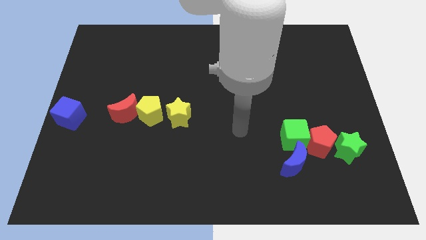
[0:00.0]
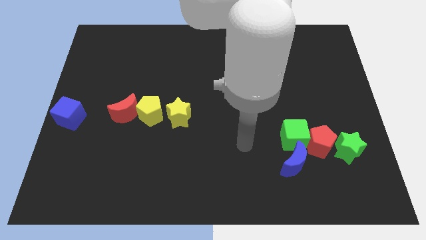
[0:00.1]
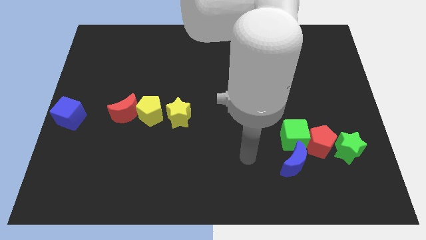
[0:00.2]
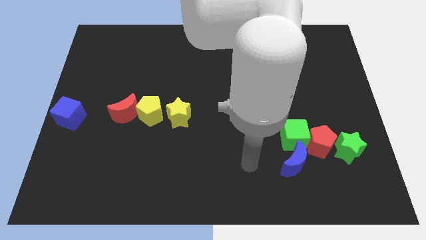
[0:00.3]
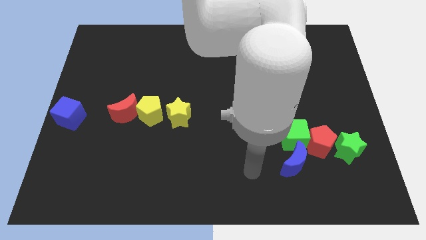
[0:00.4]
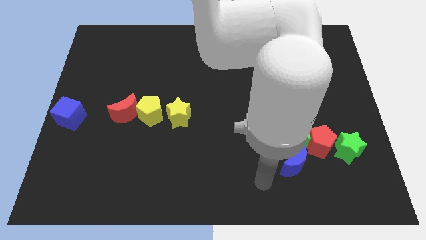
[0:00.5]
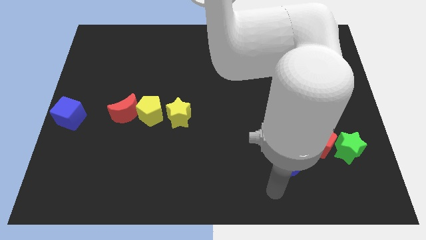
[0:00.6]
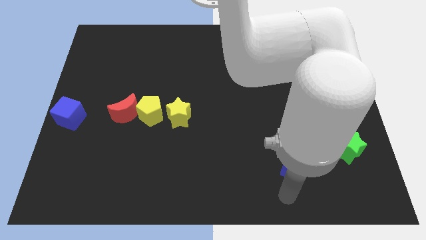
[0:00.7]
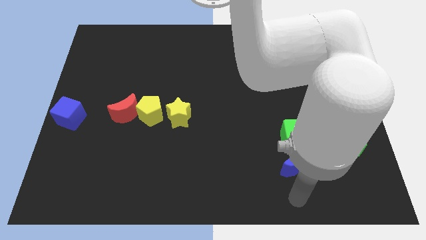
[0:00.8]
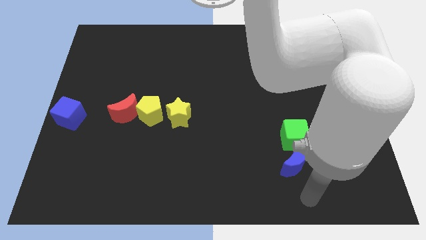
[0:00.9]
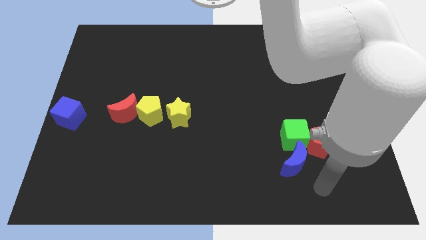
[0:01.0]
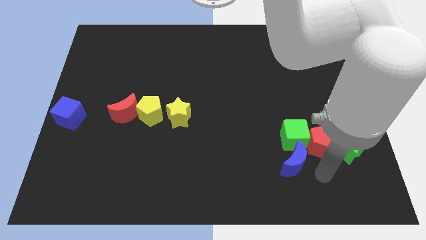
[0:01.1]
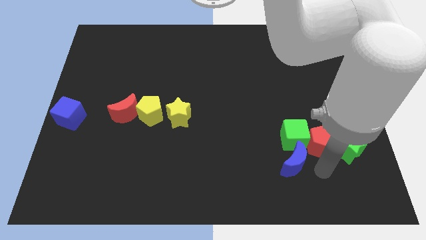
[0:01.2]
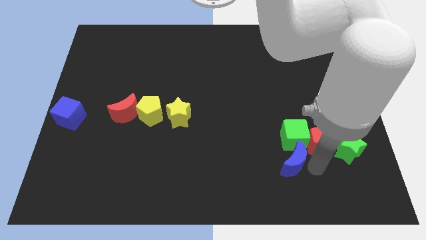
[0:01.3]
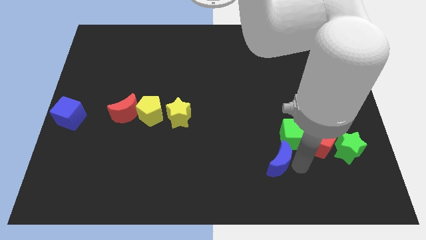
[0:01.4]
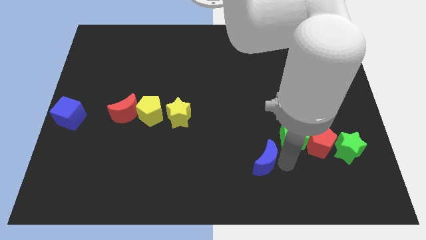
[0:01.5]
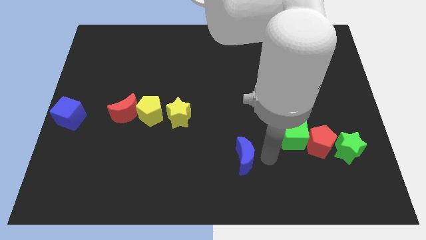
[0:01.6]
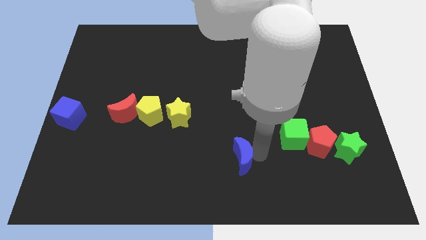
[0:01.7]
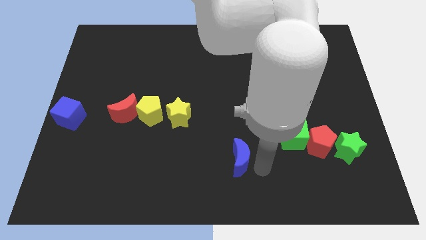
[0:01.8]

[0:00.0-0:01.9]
separate the blue moon from the green cube

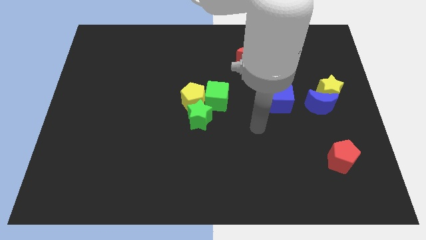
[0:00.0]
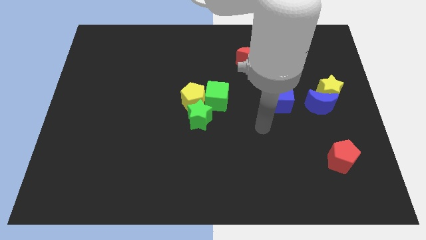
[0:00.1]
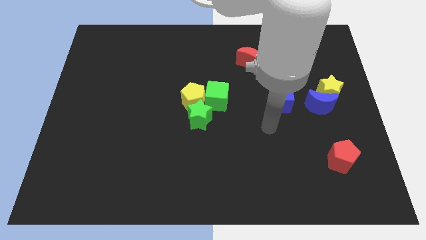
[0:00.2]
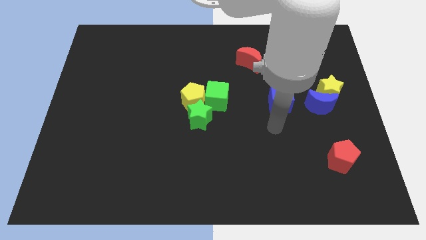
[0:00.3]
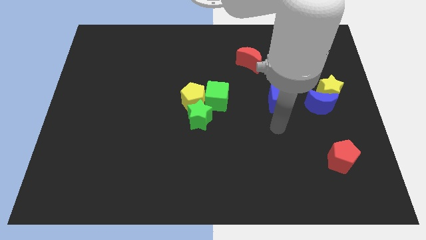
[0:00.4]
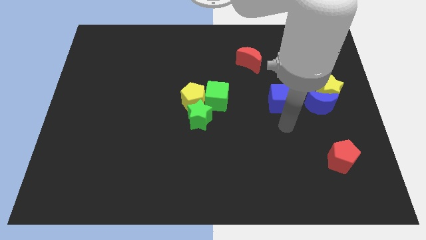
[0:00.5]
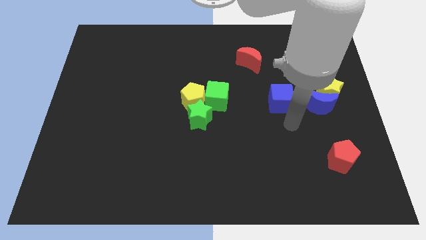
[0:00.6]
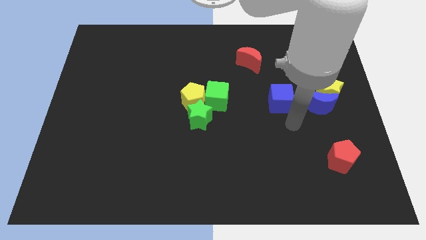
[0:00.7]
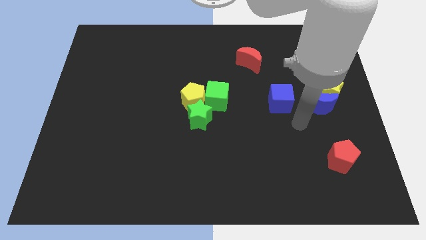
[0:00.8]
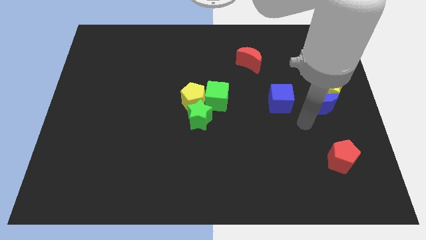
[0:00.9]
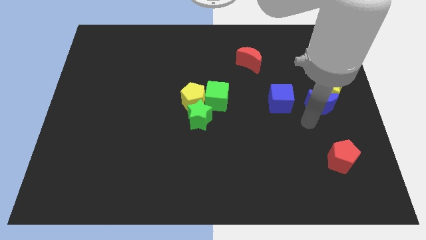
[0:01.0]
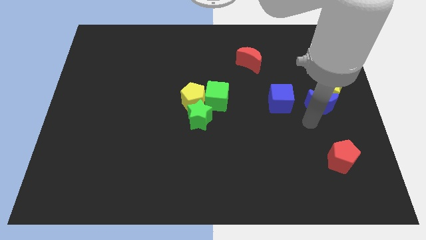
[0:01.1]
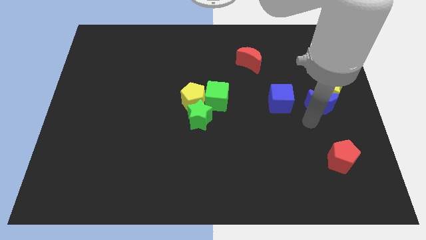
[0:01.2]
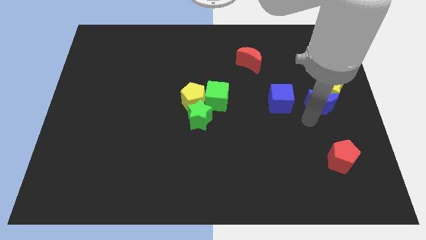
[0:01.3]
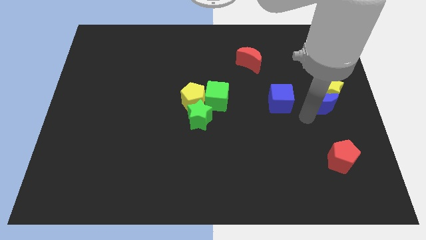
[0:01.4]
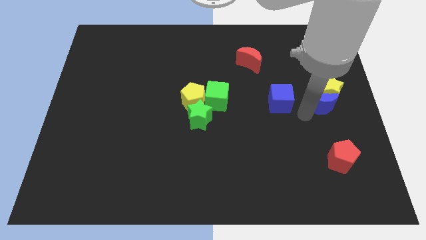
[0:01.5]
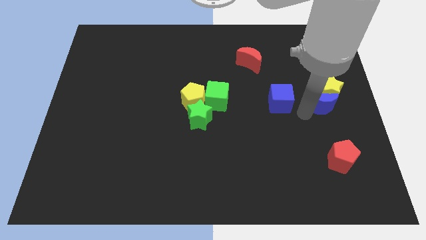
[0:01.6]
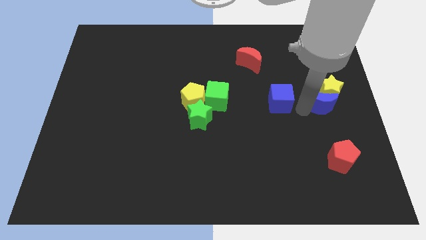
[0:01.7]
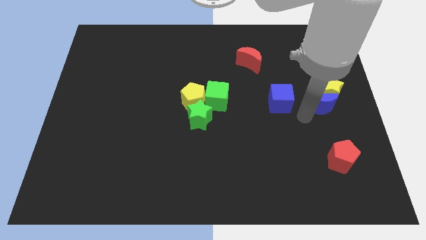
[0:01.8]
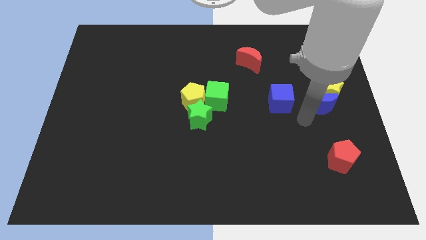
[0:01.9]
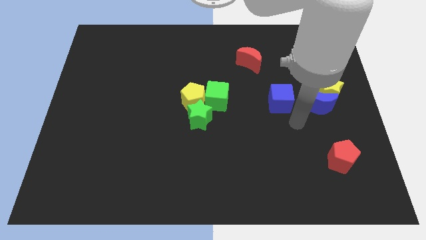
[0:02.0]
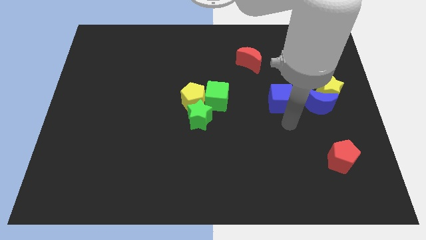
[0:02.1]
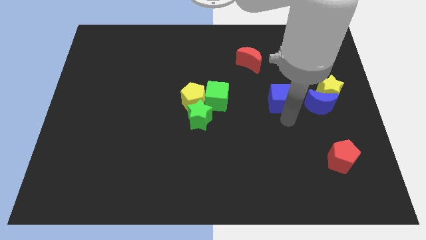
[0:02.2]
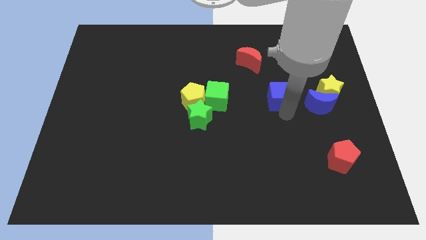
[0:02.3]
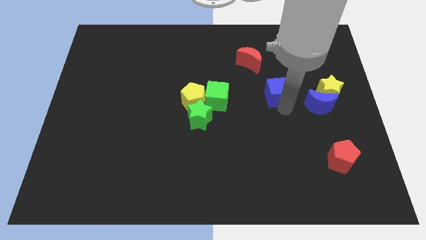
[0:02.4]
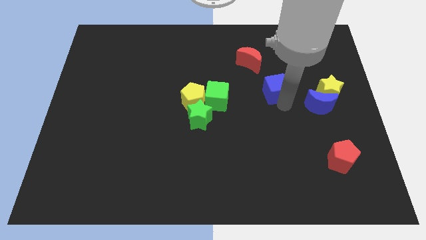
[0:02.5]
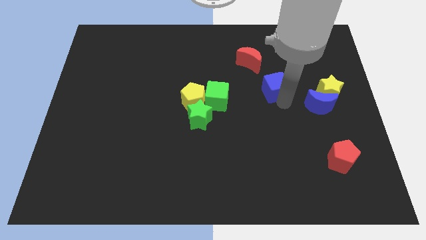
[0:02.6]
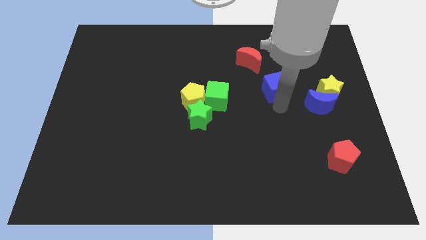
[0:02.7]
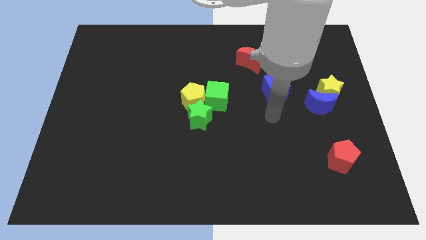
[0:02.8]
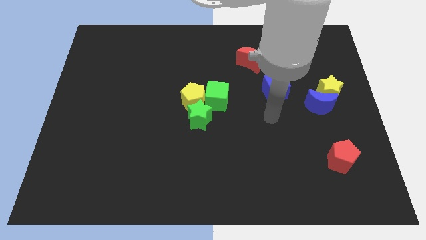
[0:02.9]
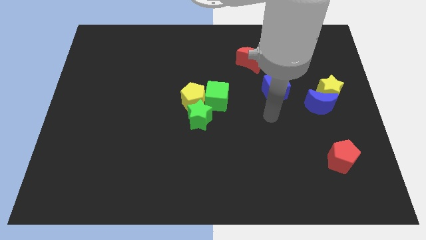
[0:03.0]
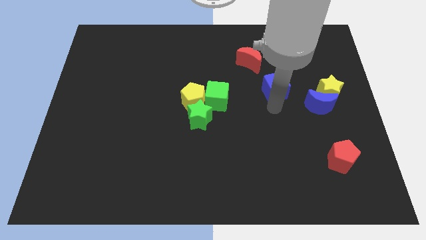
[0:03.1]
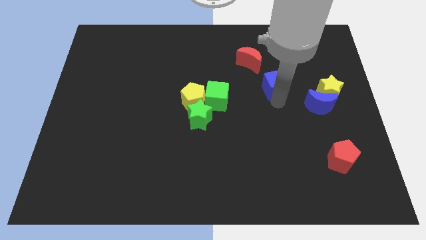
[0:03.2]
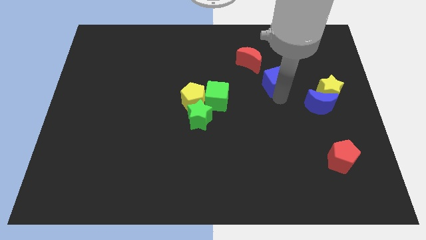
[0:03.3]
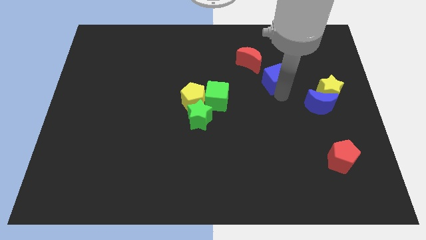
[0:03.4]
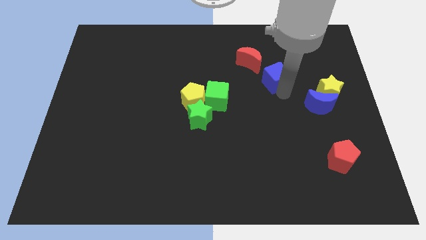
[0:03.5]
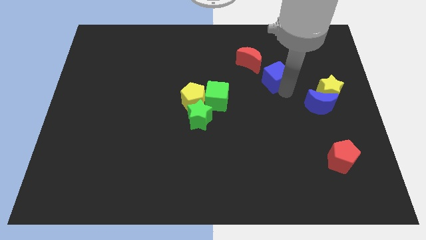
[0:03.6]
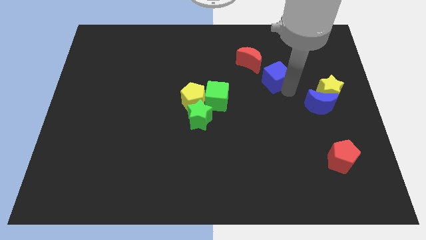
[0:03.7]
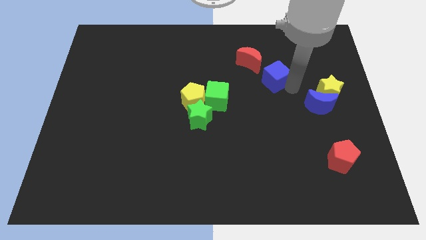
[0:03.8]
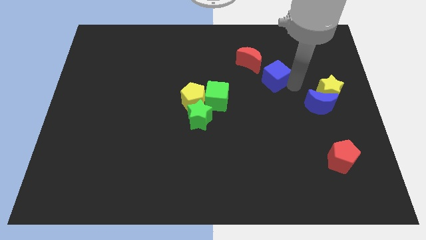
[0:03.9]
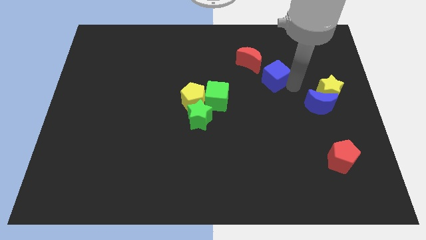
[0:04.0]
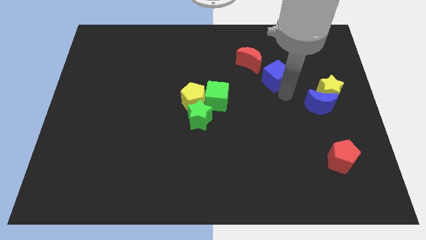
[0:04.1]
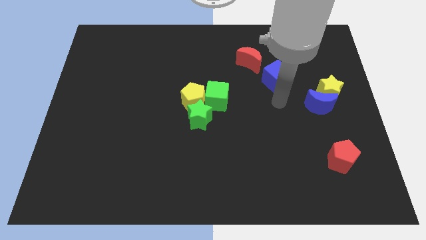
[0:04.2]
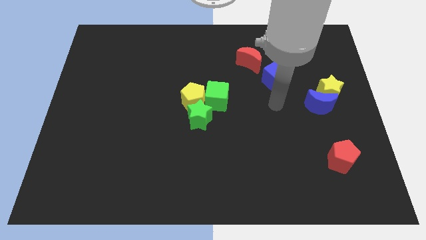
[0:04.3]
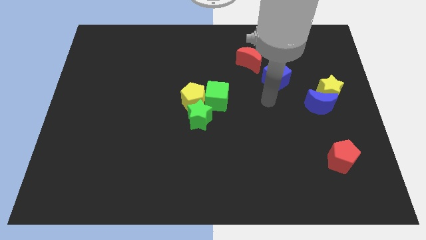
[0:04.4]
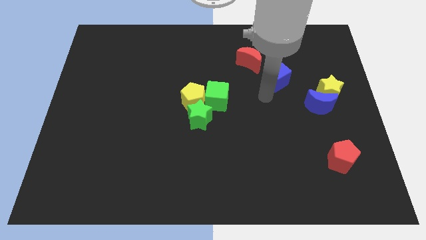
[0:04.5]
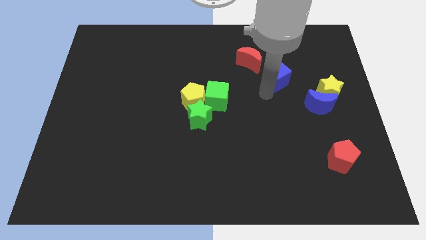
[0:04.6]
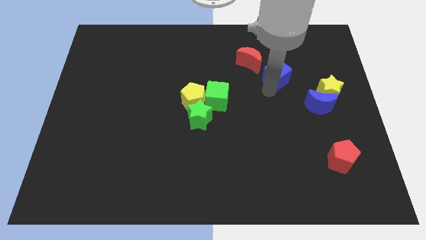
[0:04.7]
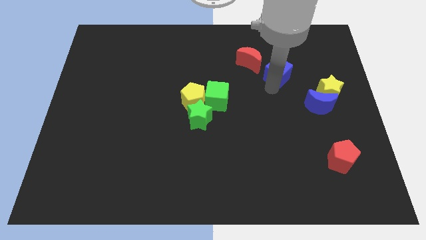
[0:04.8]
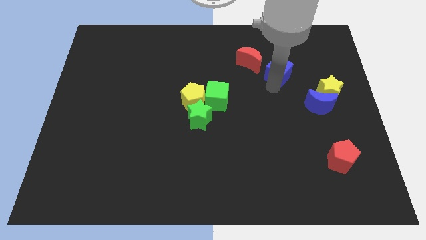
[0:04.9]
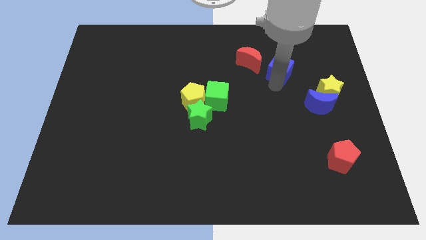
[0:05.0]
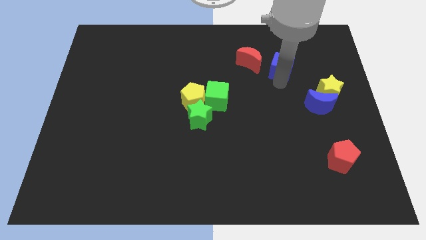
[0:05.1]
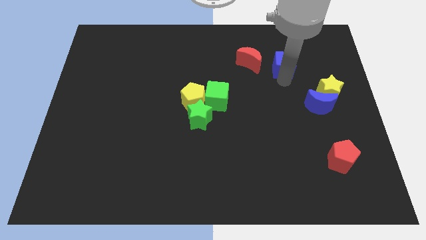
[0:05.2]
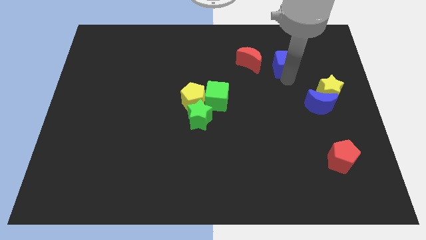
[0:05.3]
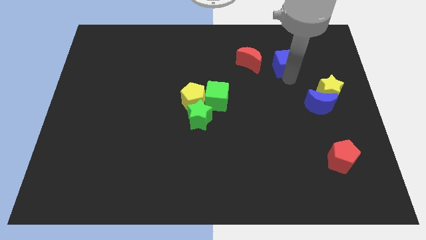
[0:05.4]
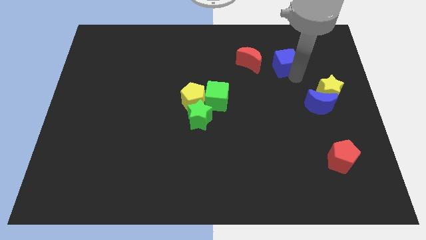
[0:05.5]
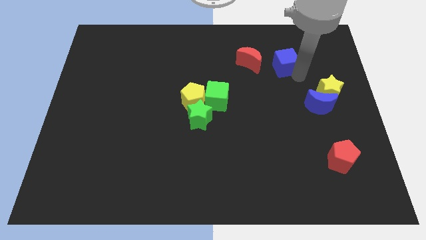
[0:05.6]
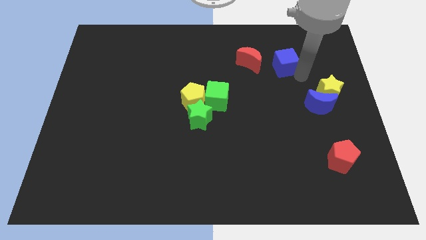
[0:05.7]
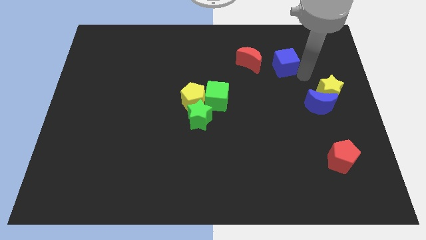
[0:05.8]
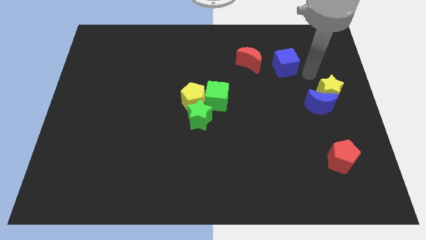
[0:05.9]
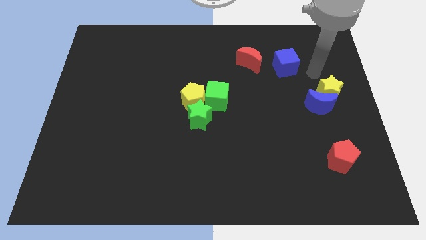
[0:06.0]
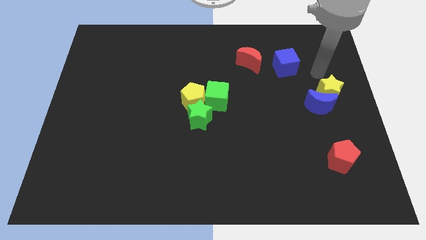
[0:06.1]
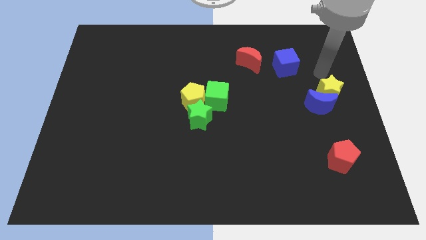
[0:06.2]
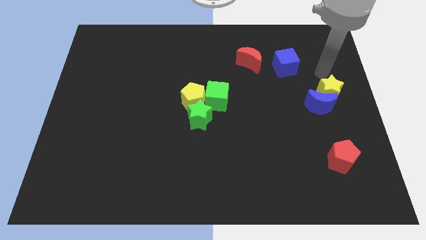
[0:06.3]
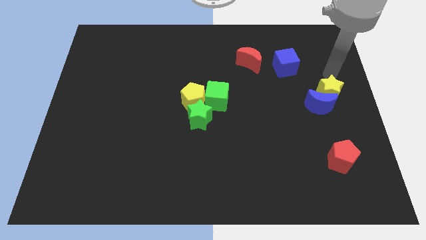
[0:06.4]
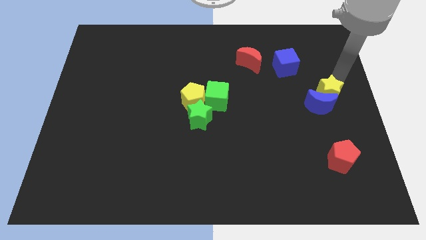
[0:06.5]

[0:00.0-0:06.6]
place the blue cube right to the red crescent

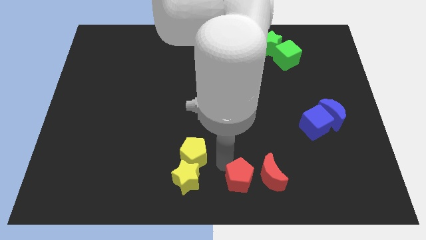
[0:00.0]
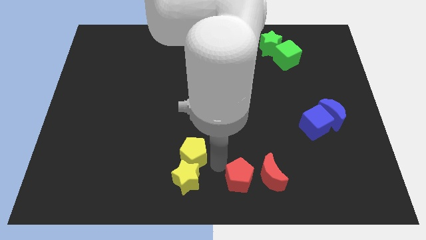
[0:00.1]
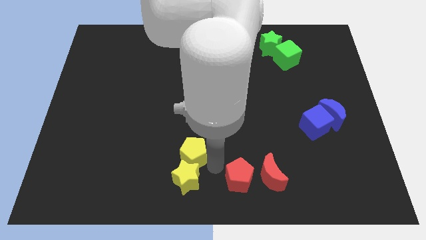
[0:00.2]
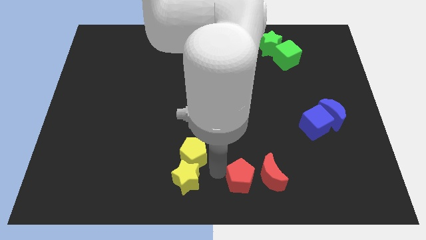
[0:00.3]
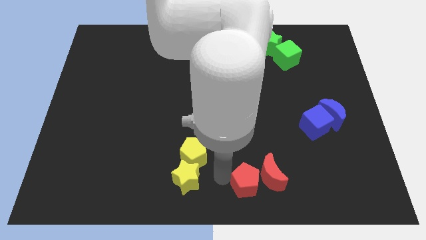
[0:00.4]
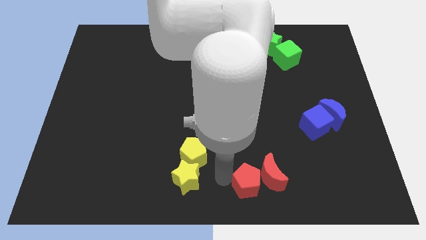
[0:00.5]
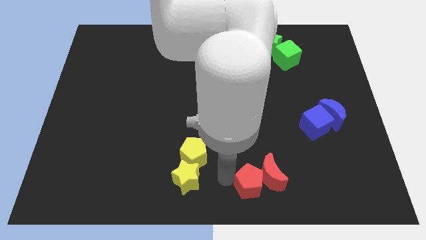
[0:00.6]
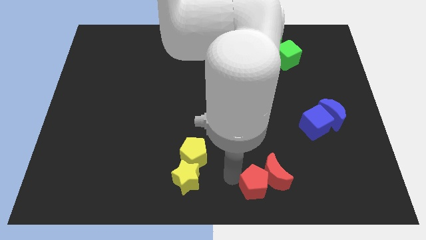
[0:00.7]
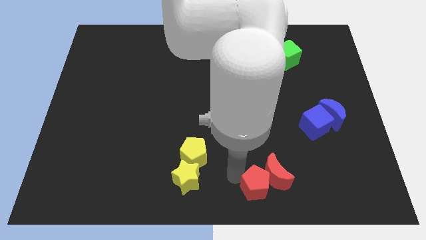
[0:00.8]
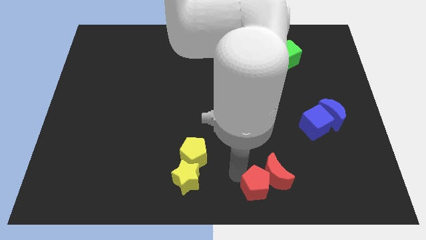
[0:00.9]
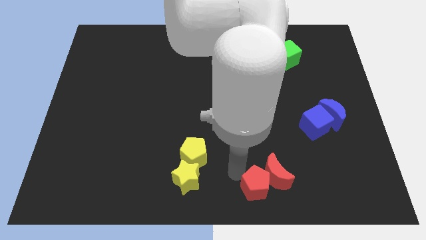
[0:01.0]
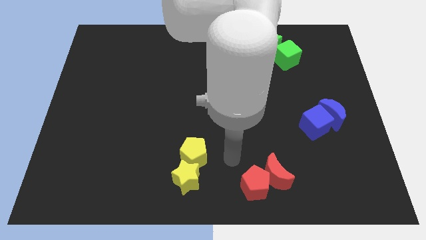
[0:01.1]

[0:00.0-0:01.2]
push red pentagon into red moon
